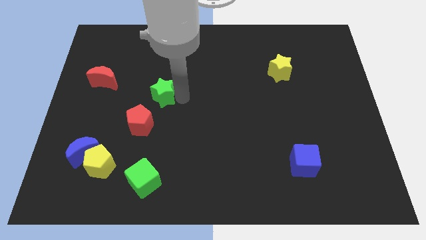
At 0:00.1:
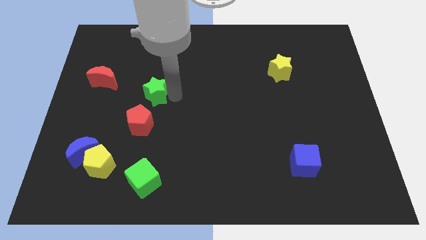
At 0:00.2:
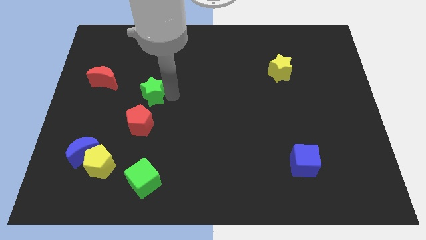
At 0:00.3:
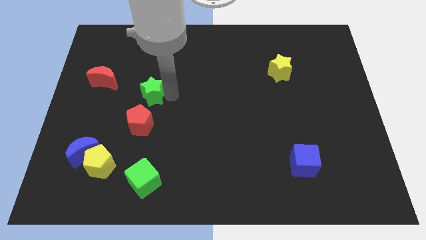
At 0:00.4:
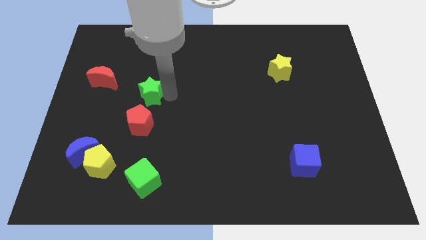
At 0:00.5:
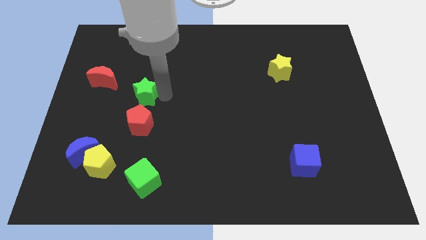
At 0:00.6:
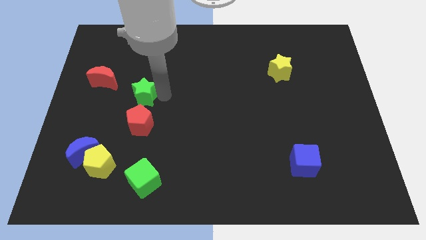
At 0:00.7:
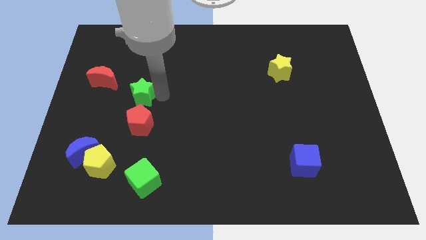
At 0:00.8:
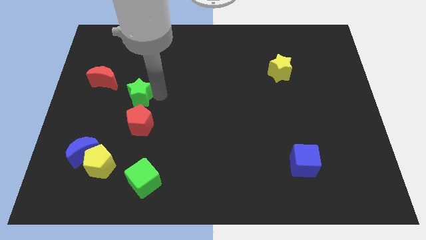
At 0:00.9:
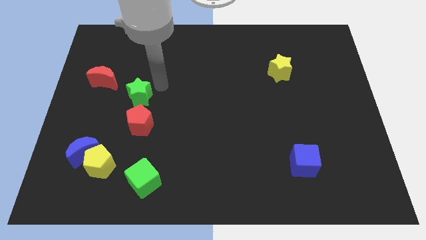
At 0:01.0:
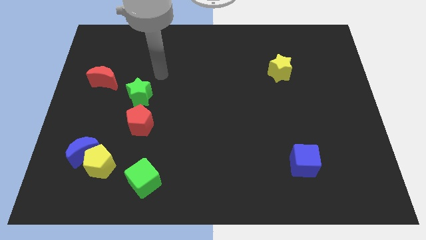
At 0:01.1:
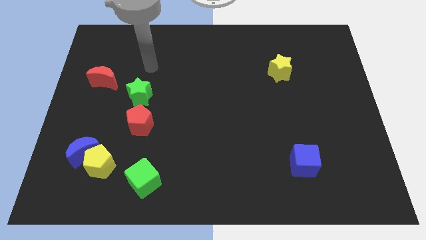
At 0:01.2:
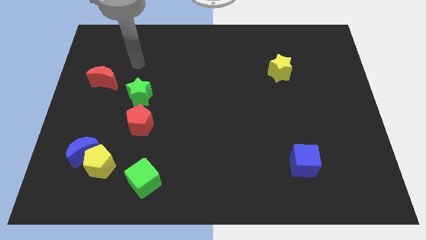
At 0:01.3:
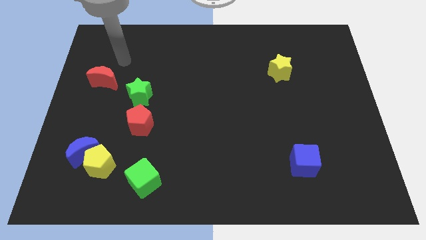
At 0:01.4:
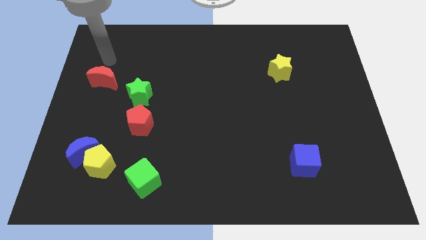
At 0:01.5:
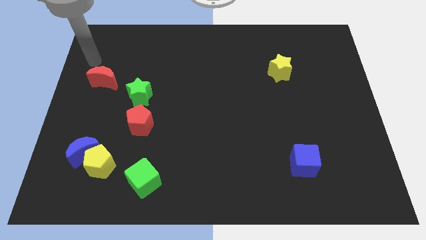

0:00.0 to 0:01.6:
place green star to the top of red pentagon

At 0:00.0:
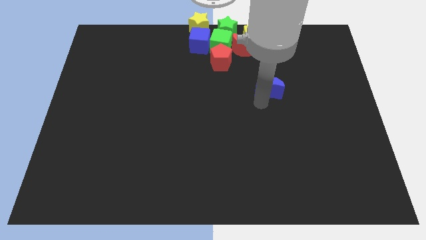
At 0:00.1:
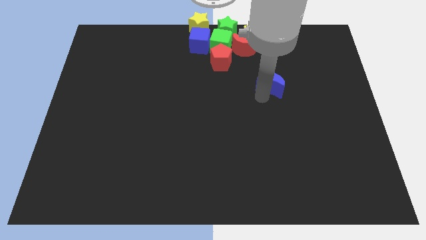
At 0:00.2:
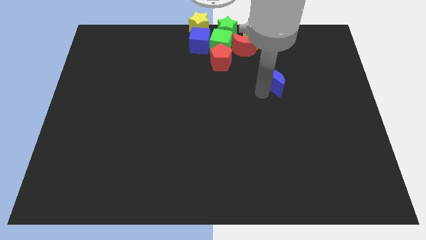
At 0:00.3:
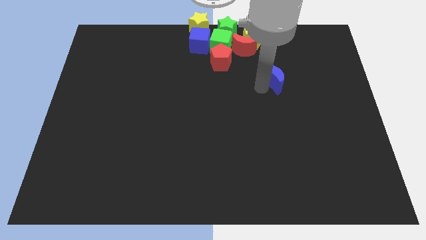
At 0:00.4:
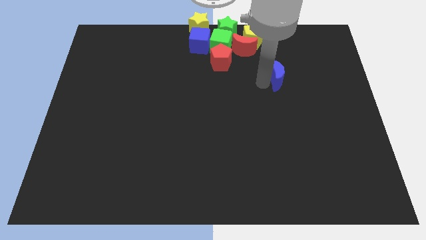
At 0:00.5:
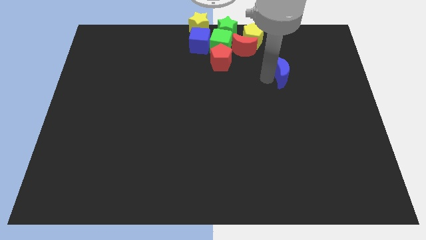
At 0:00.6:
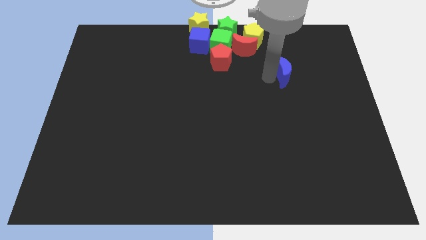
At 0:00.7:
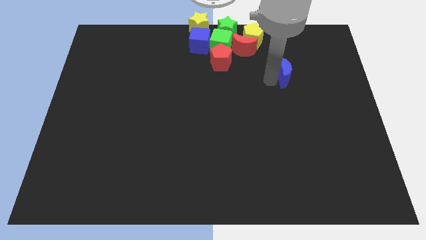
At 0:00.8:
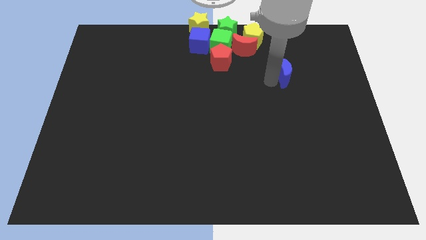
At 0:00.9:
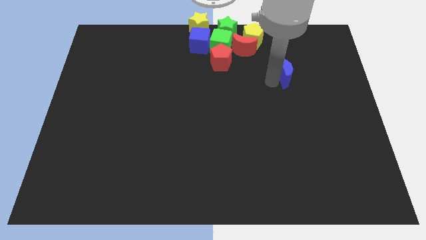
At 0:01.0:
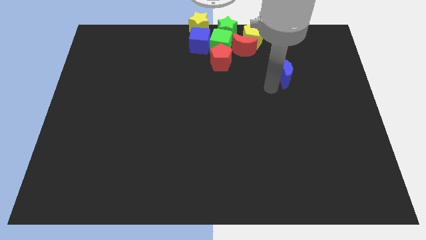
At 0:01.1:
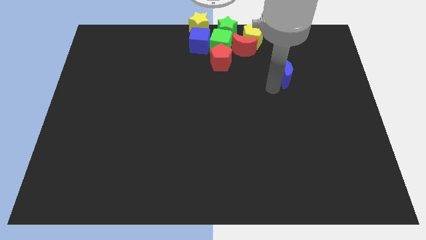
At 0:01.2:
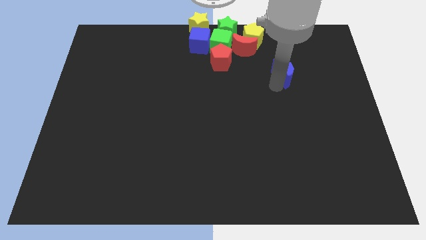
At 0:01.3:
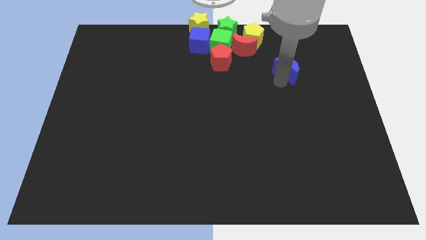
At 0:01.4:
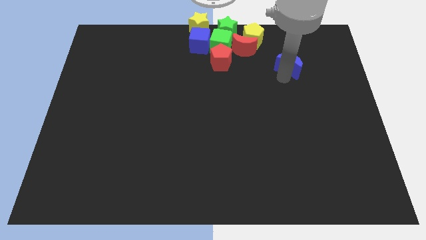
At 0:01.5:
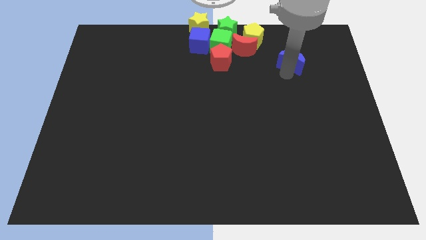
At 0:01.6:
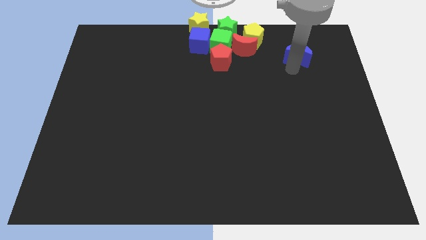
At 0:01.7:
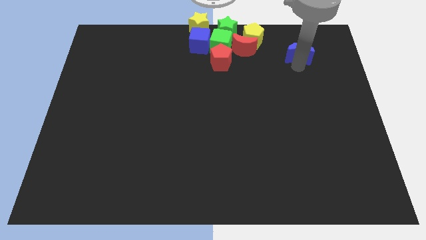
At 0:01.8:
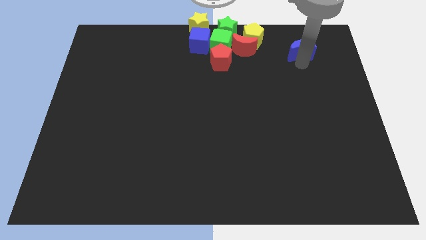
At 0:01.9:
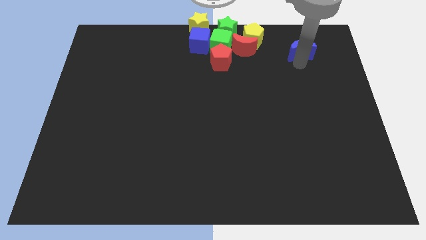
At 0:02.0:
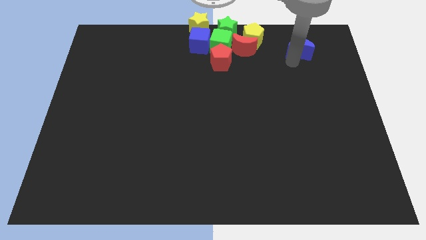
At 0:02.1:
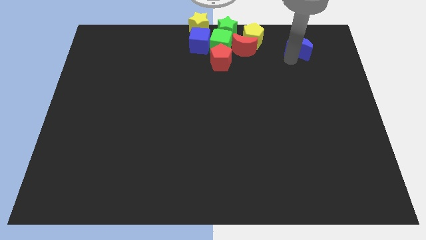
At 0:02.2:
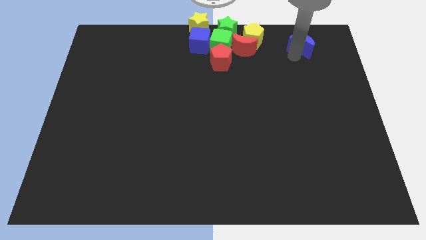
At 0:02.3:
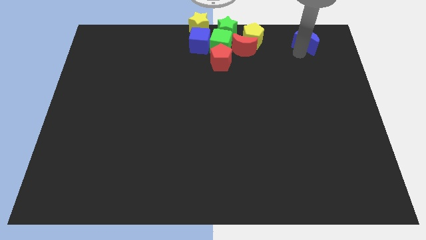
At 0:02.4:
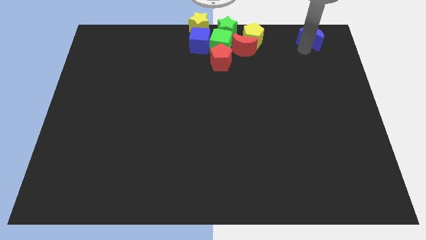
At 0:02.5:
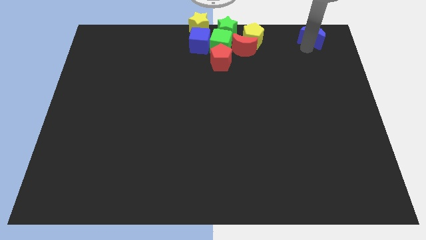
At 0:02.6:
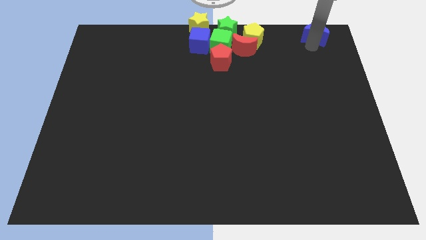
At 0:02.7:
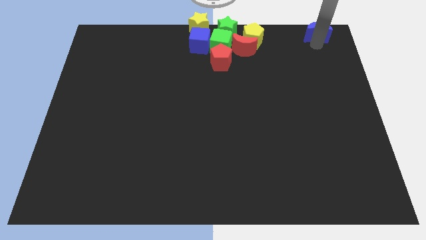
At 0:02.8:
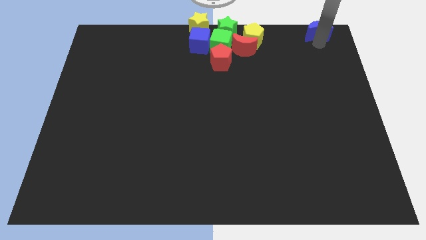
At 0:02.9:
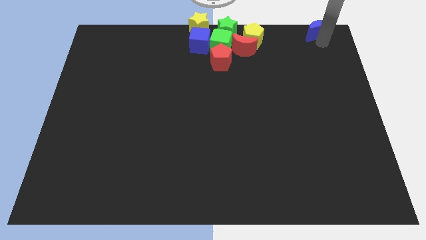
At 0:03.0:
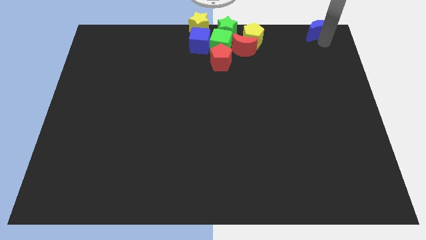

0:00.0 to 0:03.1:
place blue moon to the top right corner of the board

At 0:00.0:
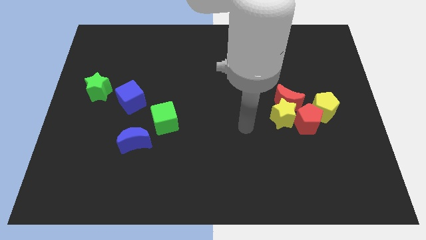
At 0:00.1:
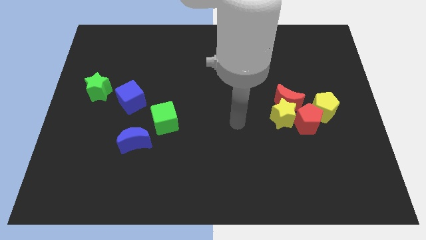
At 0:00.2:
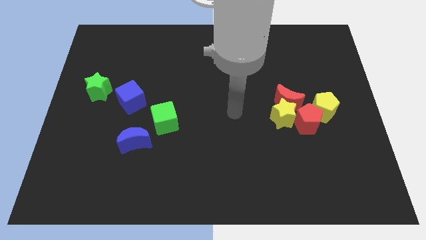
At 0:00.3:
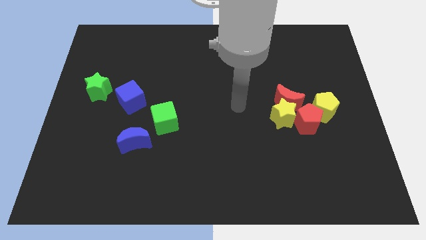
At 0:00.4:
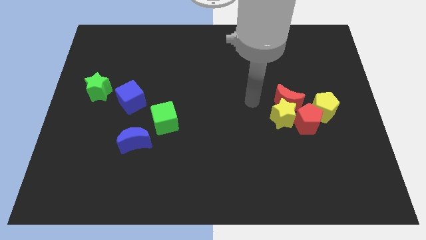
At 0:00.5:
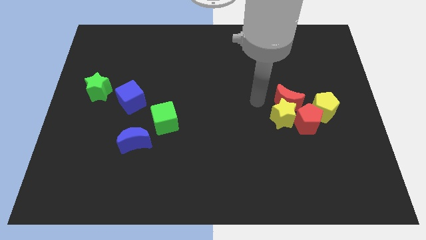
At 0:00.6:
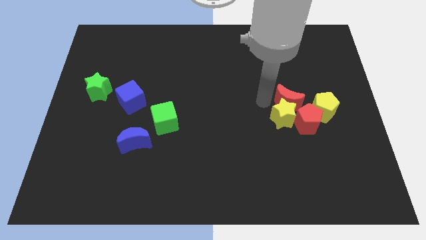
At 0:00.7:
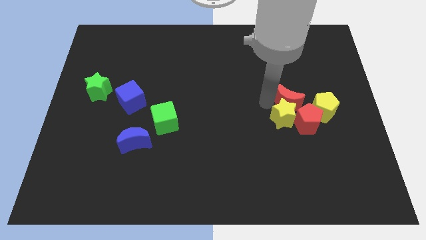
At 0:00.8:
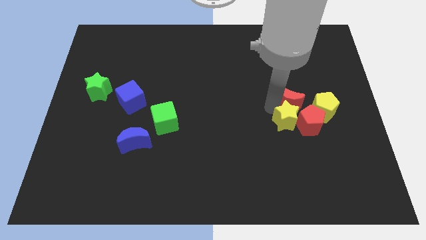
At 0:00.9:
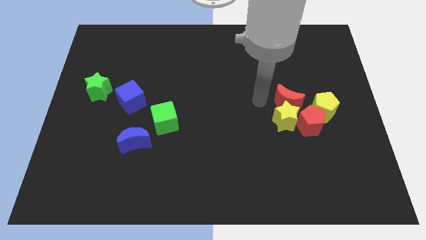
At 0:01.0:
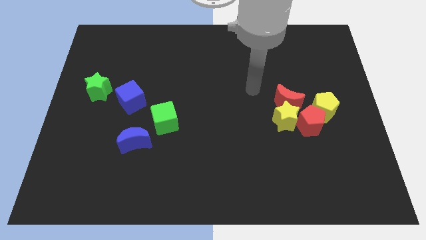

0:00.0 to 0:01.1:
place the arm on the left side of the red moon

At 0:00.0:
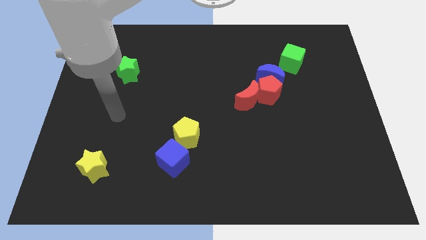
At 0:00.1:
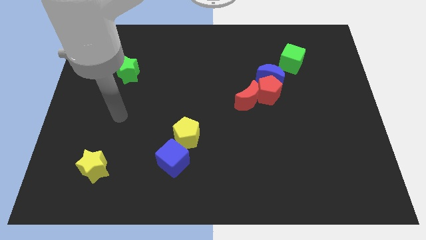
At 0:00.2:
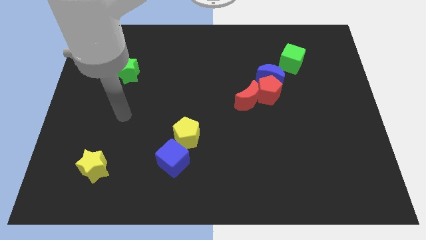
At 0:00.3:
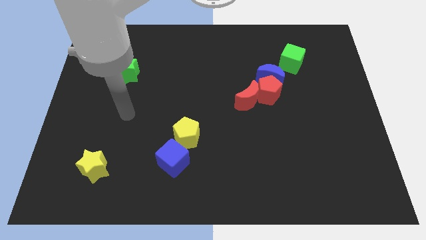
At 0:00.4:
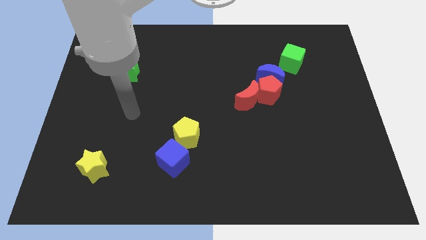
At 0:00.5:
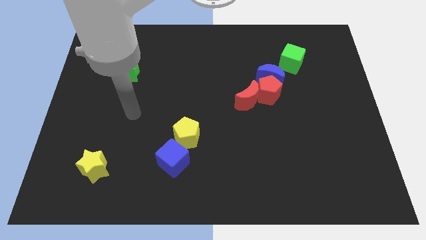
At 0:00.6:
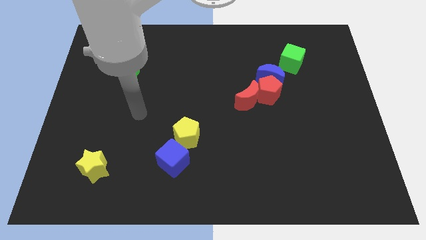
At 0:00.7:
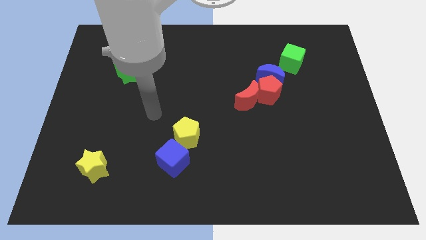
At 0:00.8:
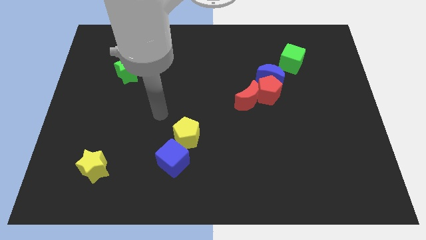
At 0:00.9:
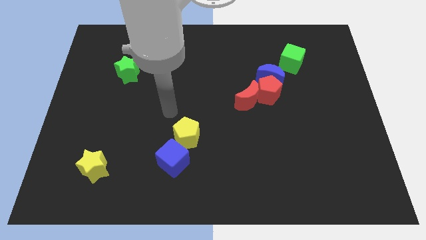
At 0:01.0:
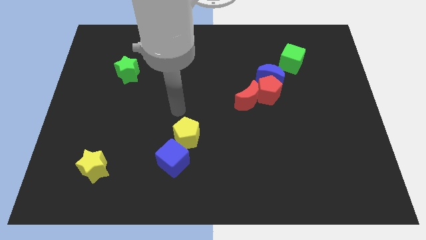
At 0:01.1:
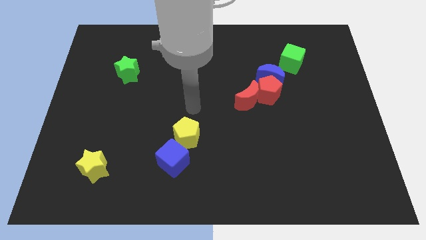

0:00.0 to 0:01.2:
point your hand above the yellow pentagon

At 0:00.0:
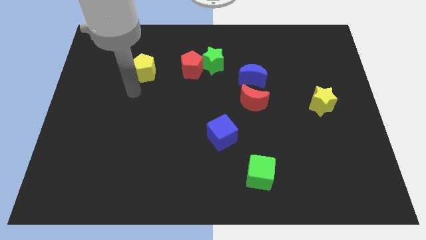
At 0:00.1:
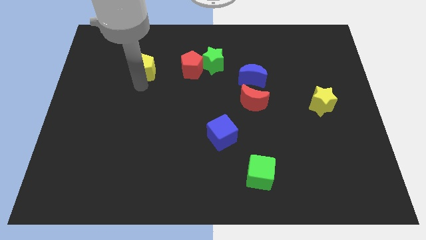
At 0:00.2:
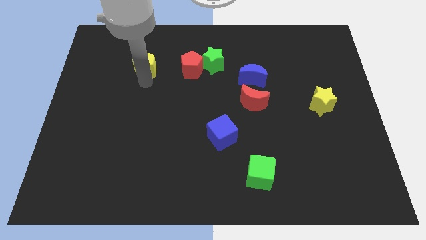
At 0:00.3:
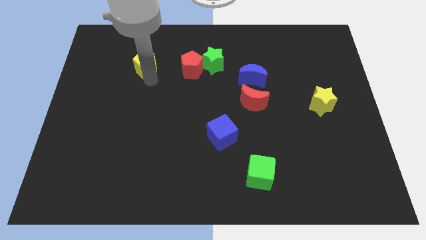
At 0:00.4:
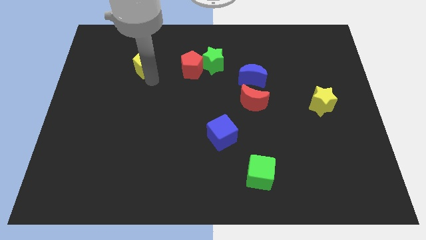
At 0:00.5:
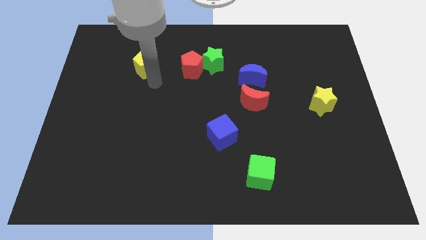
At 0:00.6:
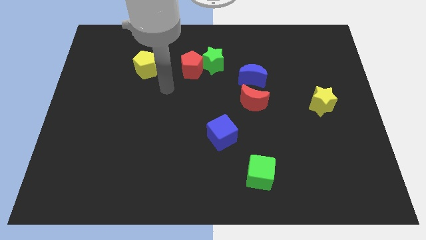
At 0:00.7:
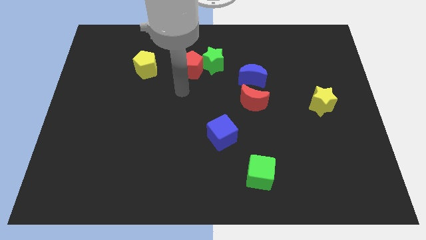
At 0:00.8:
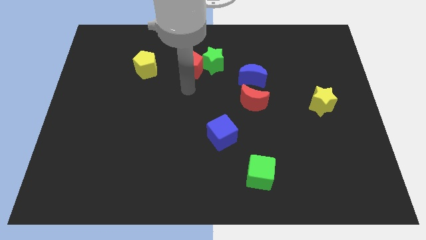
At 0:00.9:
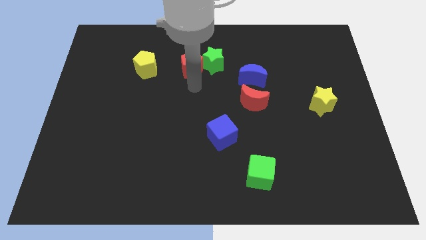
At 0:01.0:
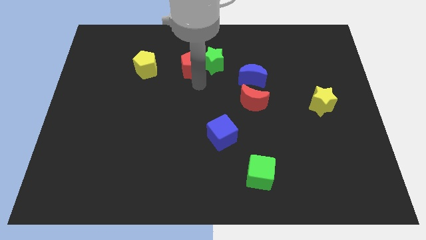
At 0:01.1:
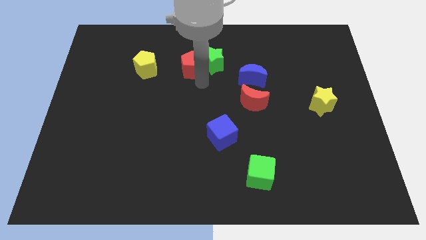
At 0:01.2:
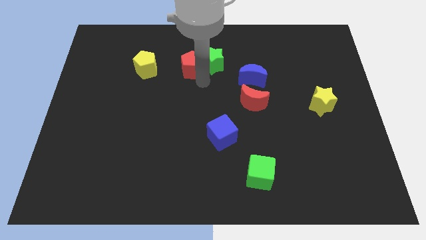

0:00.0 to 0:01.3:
move your arm and point below the red pentagon

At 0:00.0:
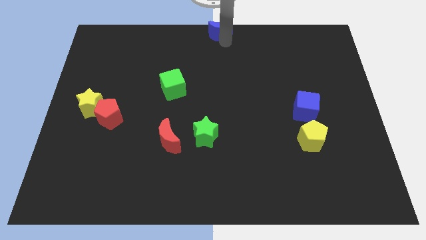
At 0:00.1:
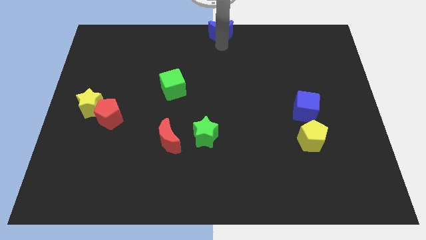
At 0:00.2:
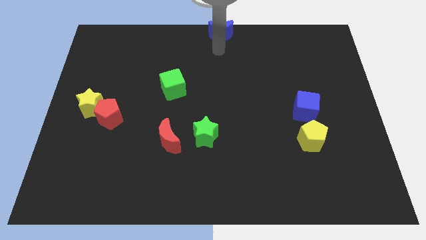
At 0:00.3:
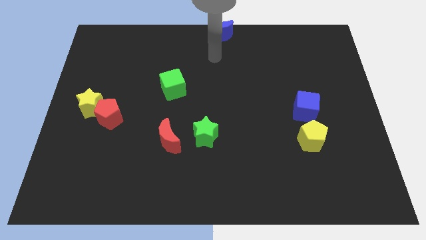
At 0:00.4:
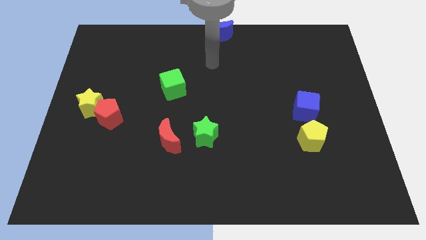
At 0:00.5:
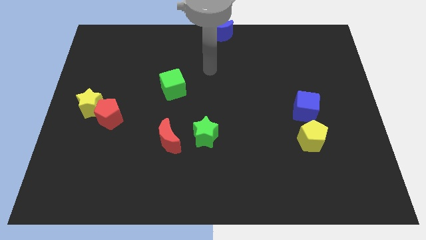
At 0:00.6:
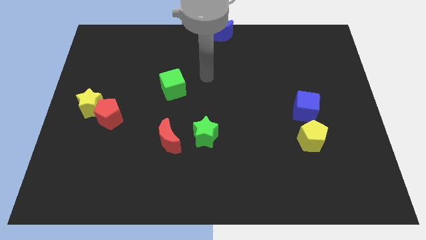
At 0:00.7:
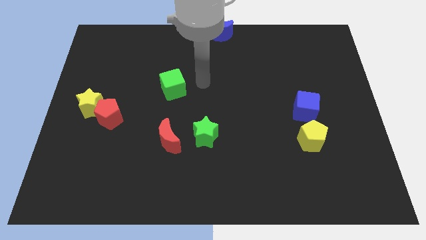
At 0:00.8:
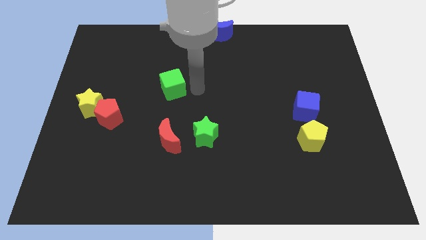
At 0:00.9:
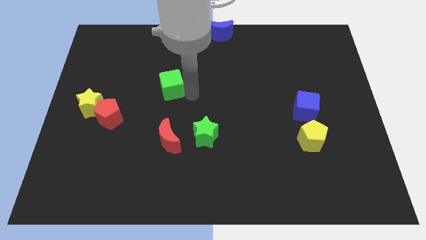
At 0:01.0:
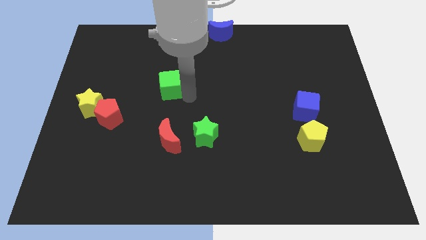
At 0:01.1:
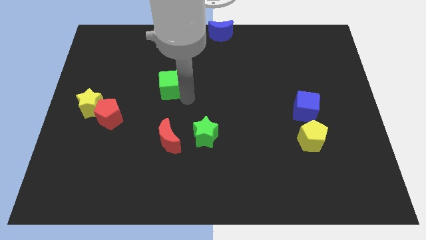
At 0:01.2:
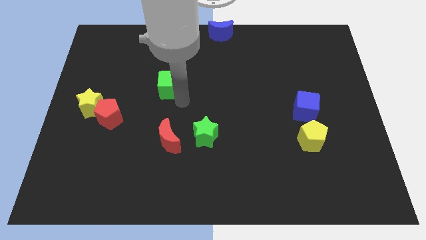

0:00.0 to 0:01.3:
move your arm away from blue moon
